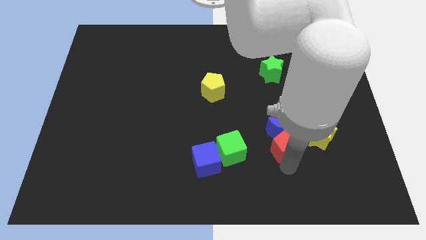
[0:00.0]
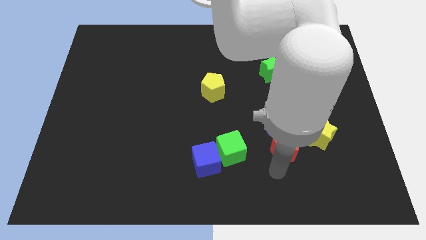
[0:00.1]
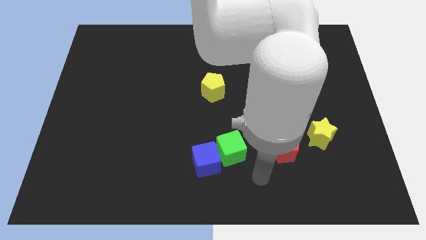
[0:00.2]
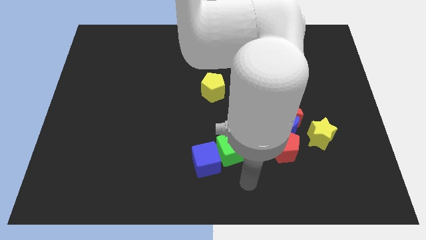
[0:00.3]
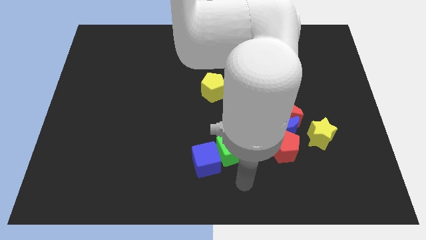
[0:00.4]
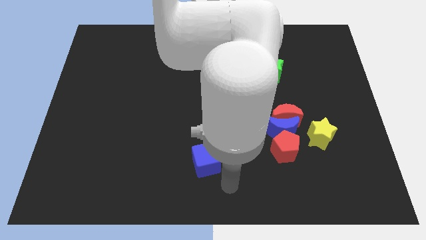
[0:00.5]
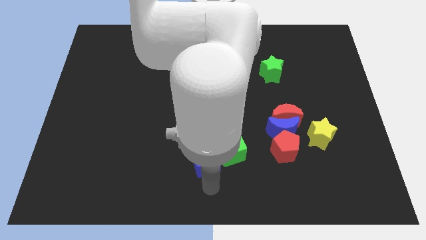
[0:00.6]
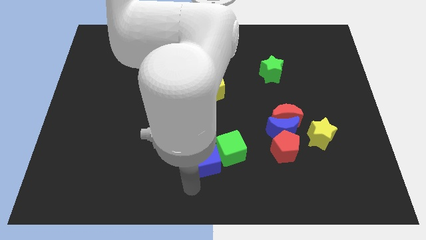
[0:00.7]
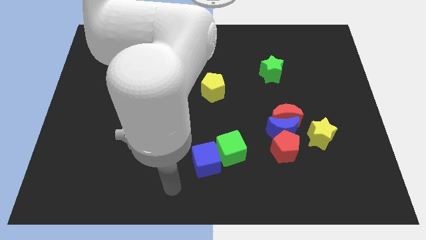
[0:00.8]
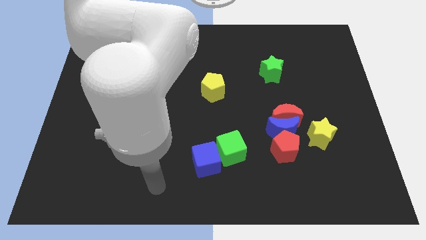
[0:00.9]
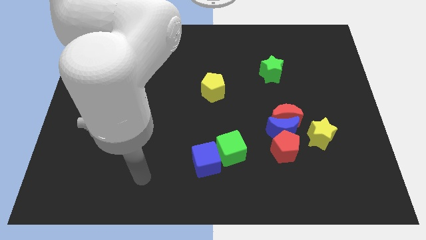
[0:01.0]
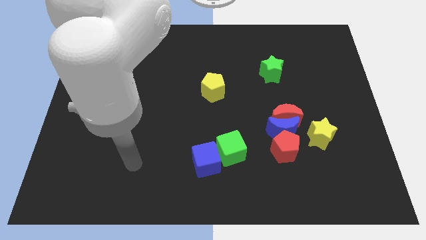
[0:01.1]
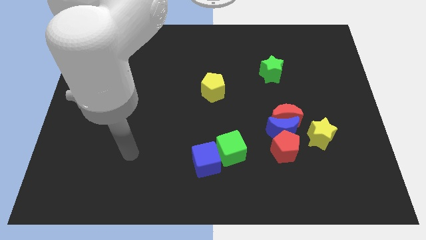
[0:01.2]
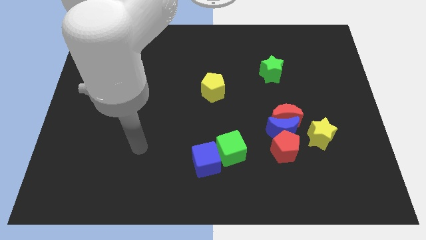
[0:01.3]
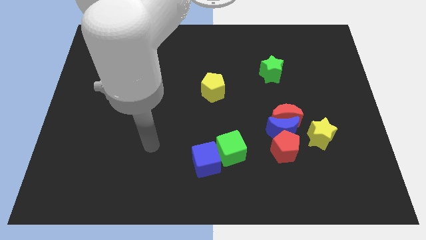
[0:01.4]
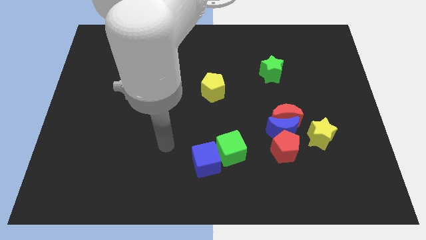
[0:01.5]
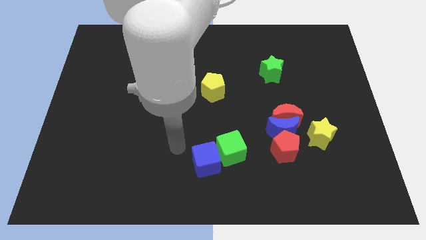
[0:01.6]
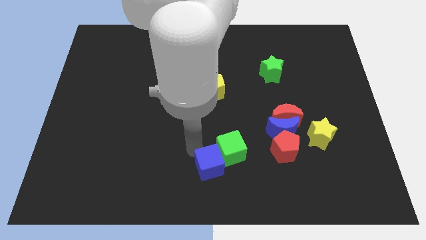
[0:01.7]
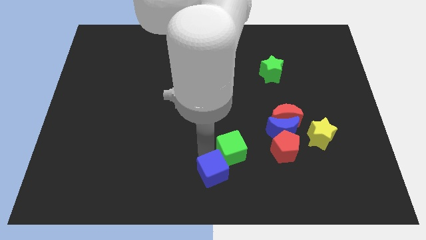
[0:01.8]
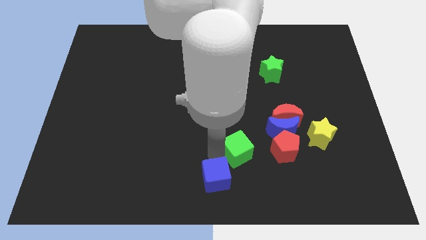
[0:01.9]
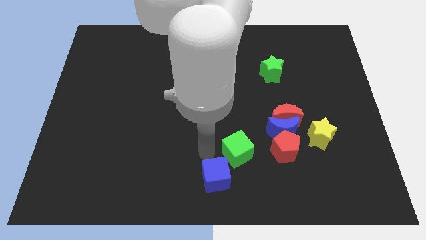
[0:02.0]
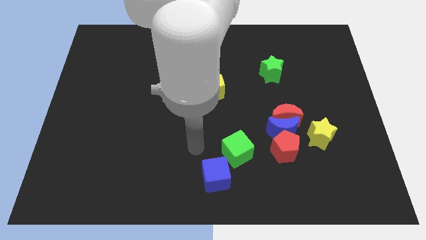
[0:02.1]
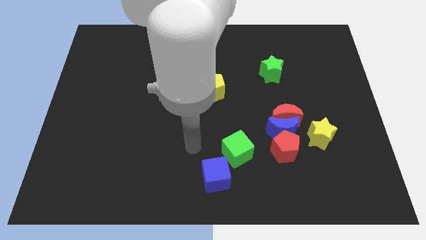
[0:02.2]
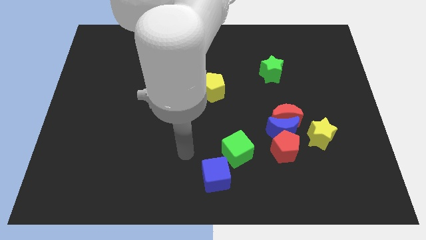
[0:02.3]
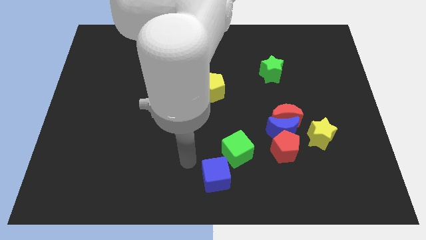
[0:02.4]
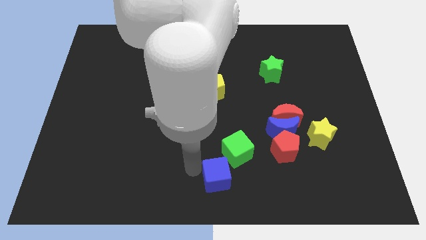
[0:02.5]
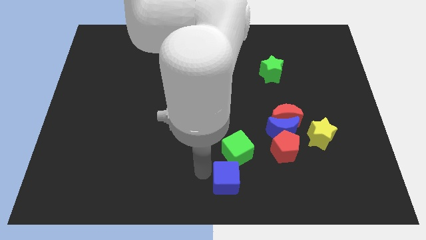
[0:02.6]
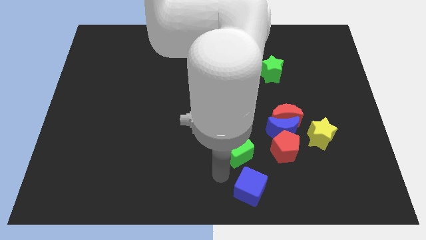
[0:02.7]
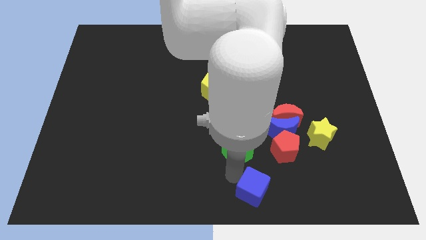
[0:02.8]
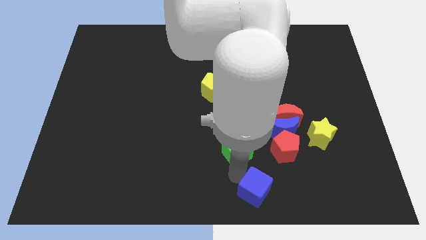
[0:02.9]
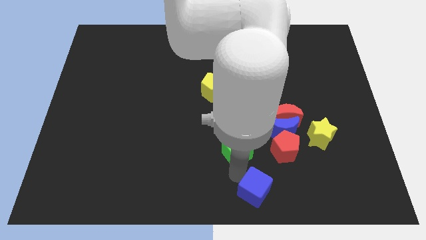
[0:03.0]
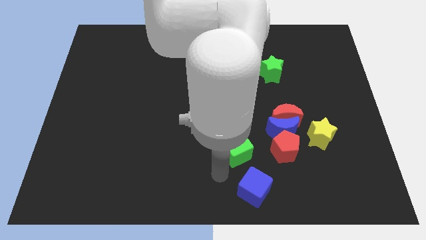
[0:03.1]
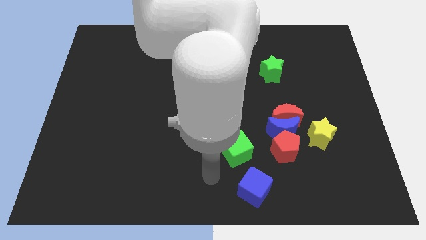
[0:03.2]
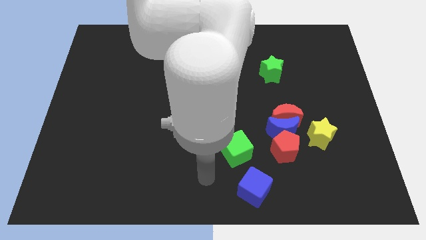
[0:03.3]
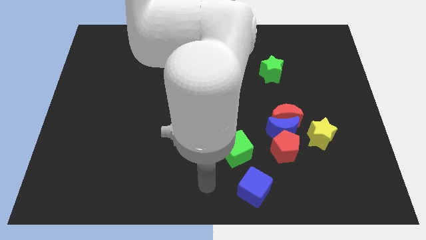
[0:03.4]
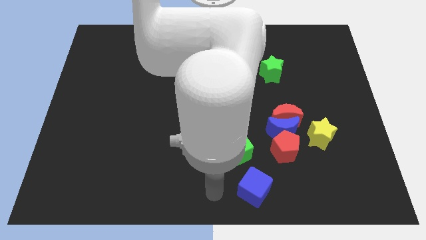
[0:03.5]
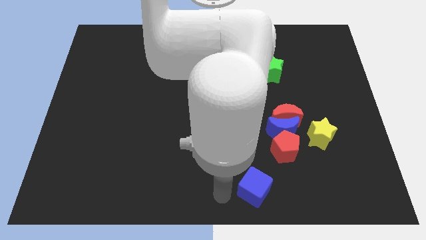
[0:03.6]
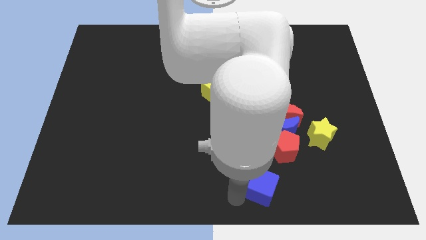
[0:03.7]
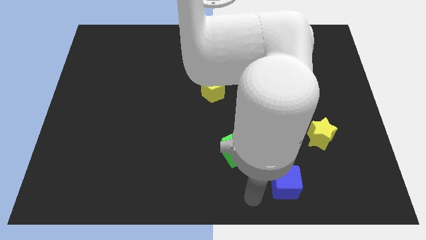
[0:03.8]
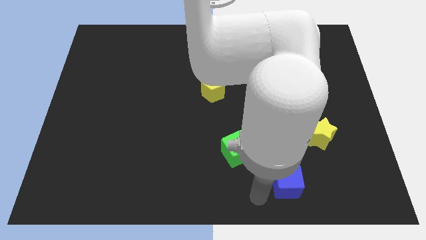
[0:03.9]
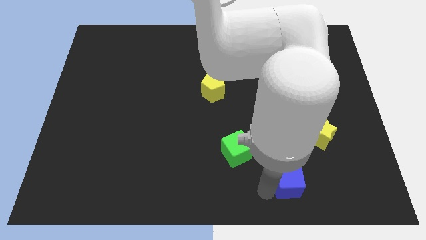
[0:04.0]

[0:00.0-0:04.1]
drag the blue cube slightly to the right

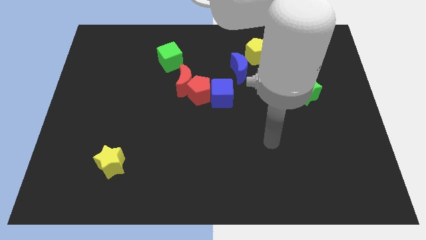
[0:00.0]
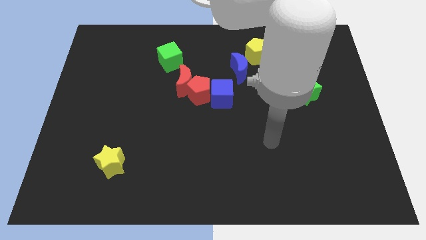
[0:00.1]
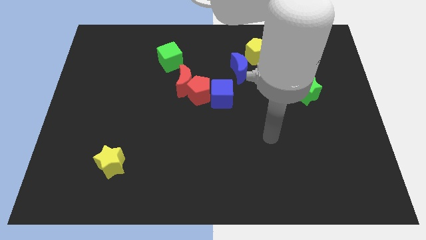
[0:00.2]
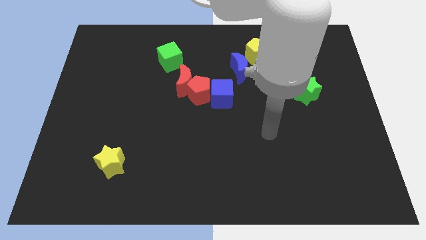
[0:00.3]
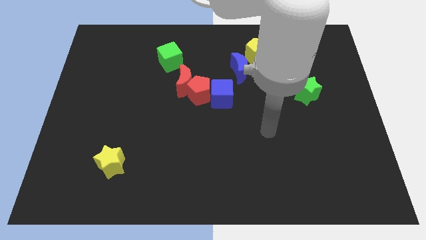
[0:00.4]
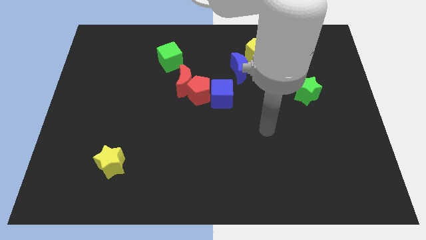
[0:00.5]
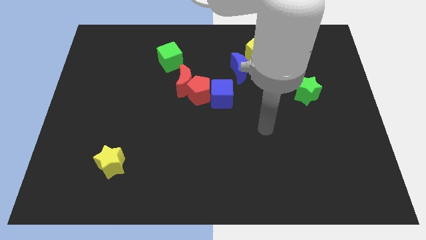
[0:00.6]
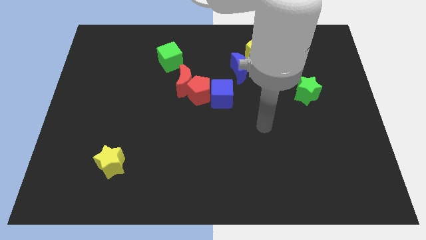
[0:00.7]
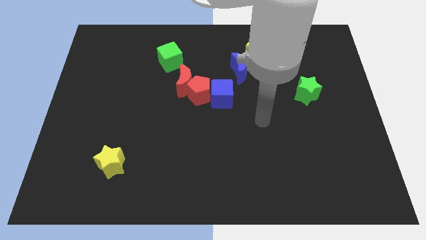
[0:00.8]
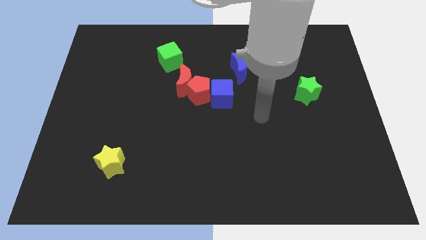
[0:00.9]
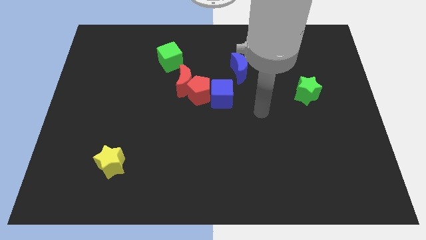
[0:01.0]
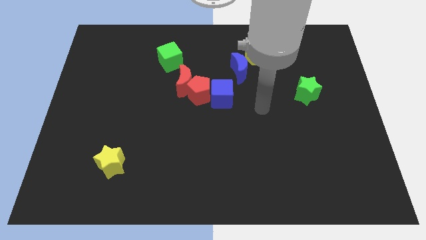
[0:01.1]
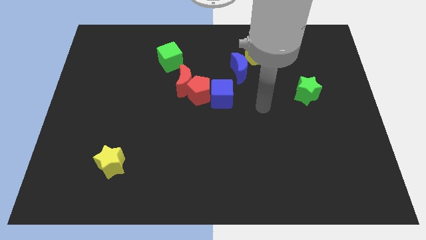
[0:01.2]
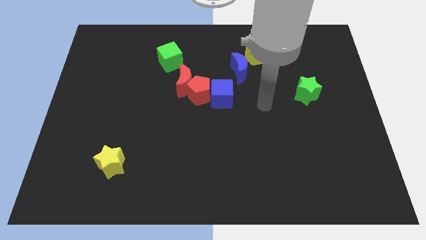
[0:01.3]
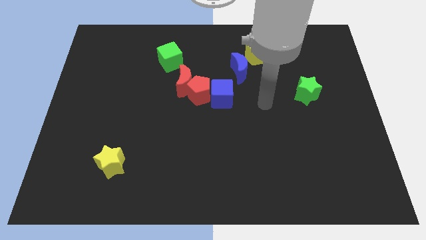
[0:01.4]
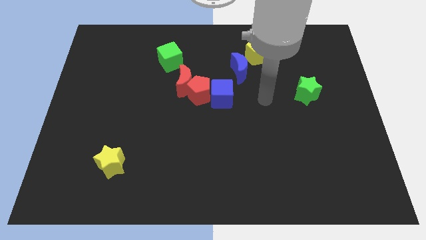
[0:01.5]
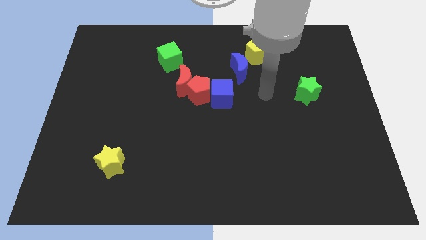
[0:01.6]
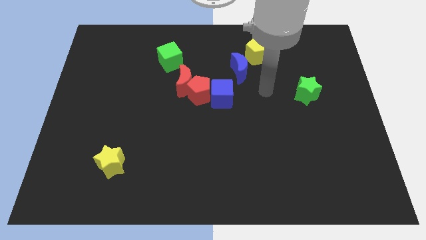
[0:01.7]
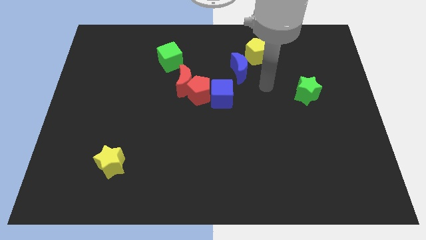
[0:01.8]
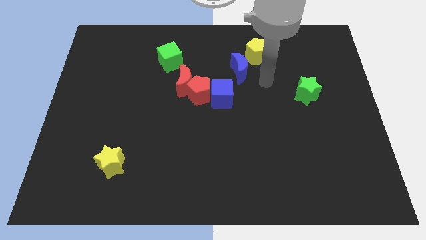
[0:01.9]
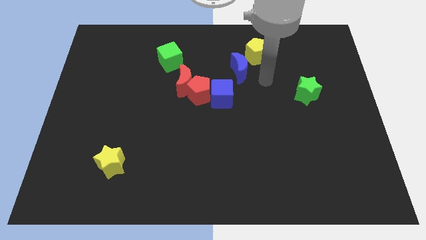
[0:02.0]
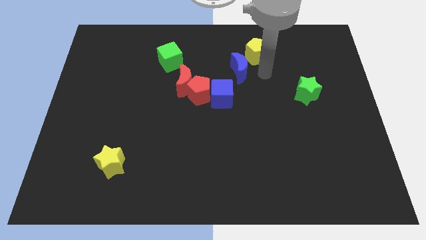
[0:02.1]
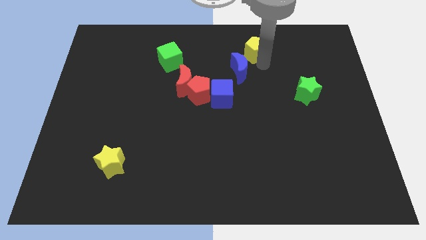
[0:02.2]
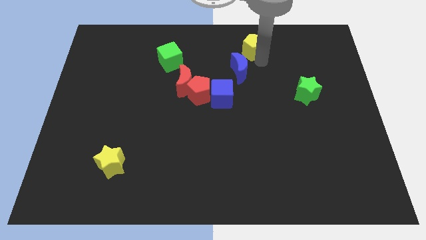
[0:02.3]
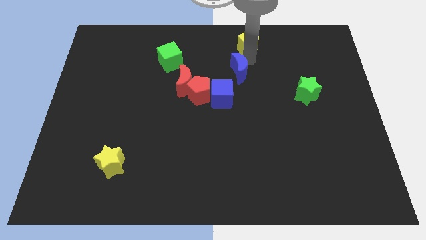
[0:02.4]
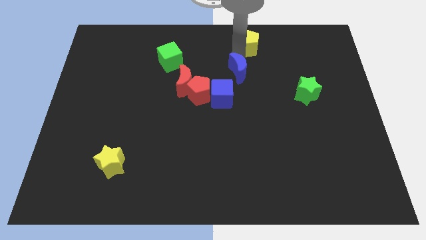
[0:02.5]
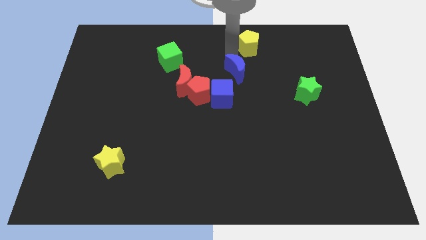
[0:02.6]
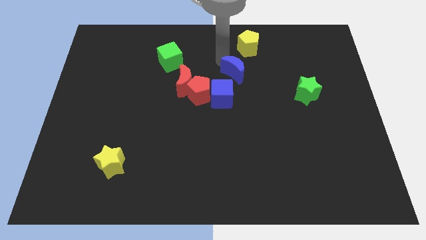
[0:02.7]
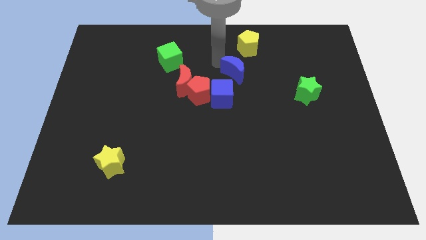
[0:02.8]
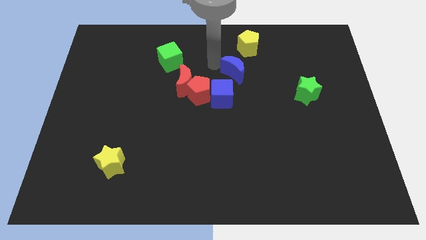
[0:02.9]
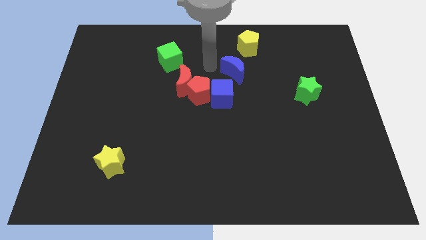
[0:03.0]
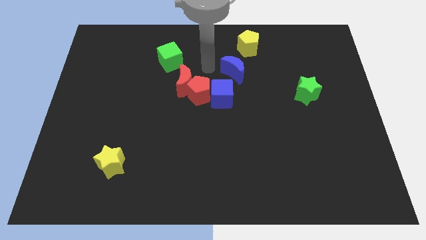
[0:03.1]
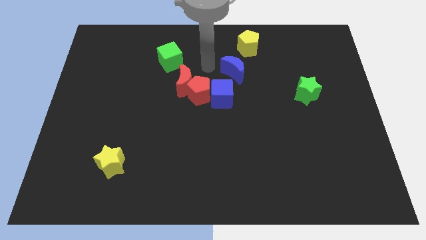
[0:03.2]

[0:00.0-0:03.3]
separate the blue crescent and the yellow pentagon

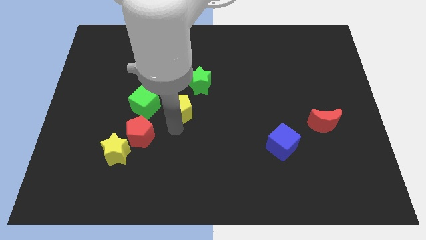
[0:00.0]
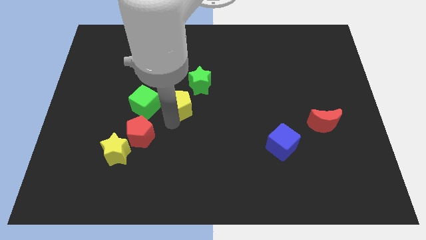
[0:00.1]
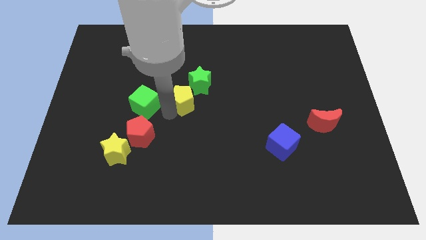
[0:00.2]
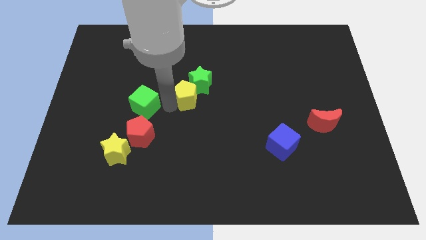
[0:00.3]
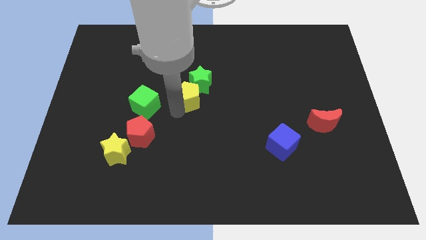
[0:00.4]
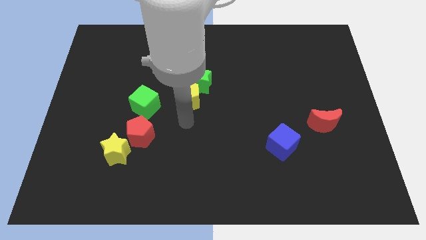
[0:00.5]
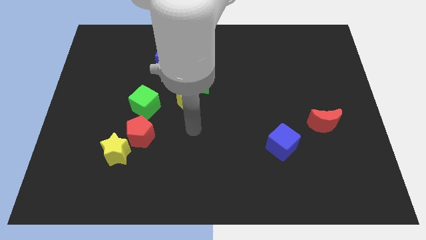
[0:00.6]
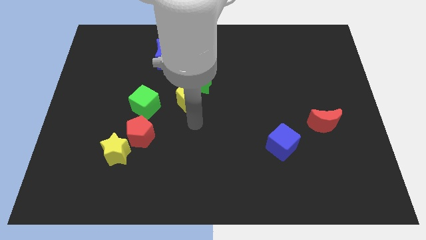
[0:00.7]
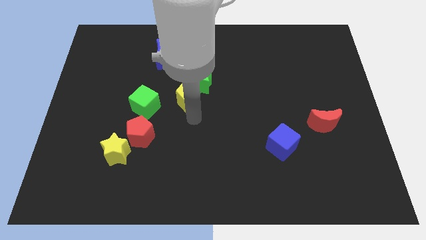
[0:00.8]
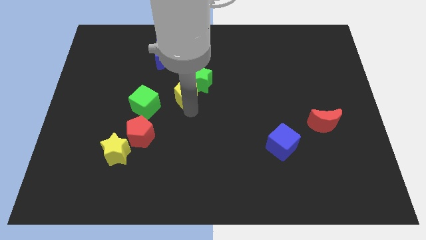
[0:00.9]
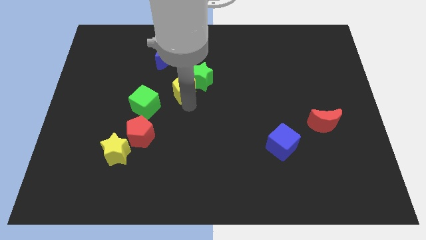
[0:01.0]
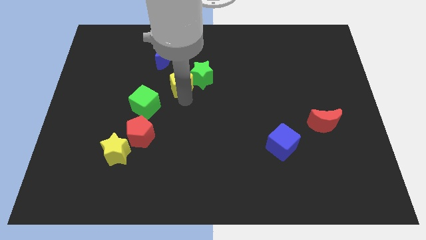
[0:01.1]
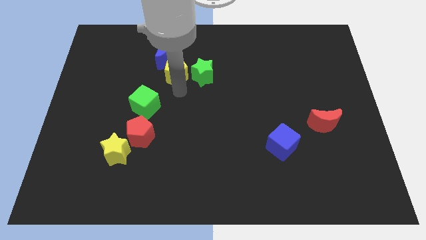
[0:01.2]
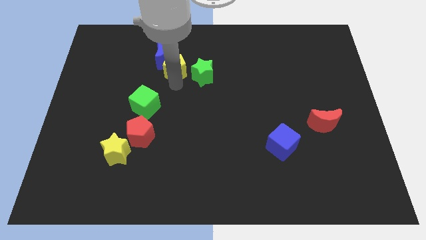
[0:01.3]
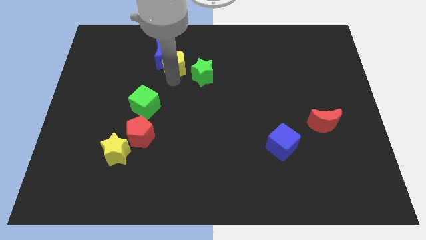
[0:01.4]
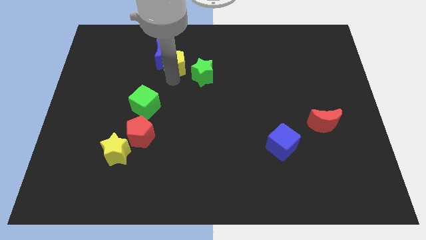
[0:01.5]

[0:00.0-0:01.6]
place the yellow pentagon in between green star and the blue crescent
